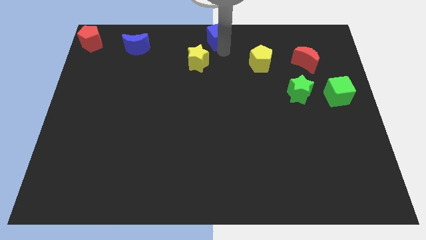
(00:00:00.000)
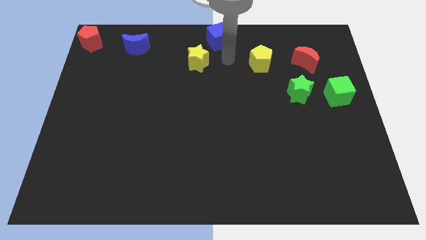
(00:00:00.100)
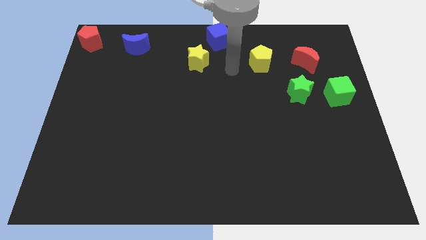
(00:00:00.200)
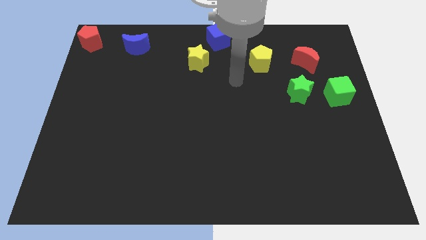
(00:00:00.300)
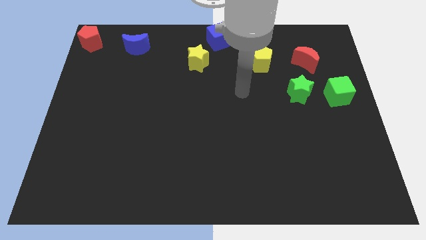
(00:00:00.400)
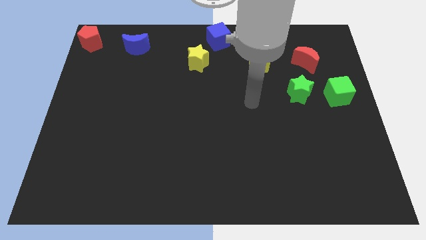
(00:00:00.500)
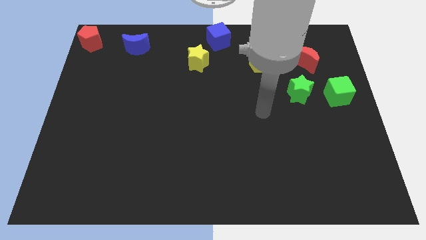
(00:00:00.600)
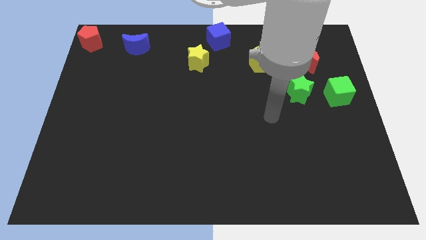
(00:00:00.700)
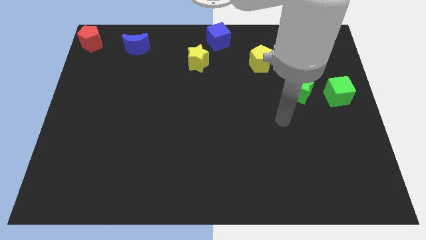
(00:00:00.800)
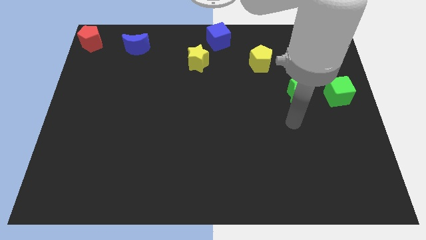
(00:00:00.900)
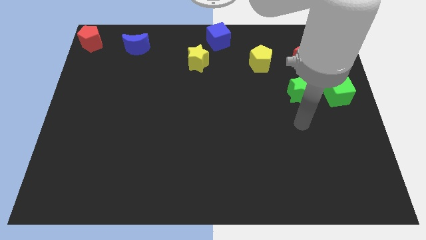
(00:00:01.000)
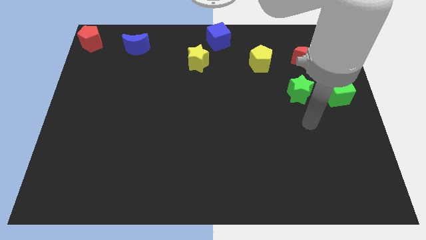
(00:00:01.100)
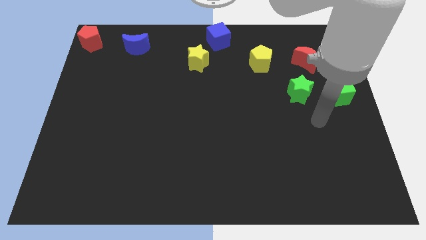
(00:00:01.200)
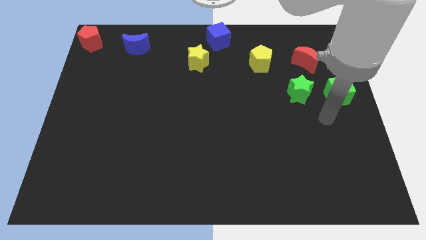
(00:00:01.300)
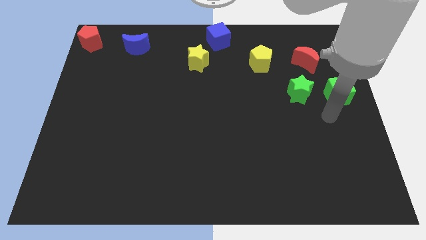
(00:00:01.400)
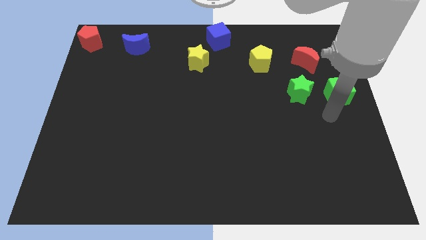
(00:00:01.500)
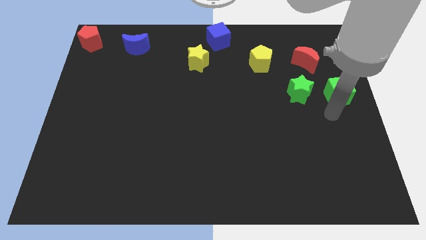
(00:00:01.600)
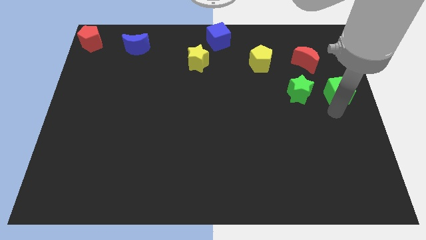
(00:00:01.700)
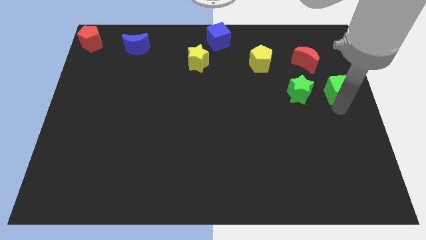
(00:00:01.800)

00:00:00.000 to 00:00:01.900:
move your arm to the bottom of the green cube

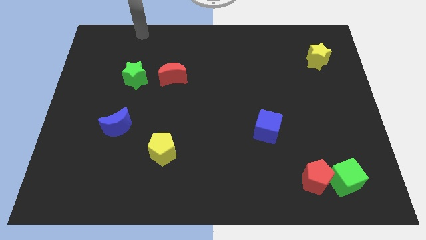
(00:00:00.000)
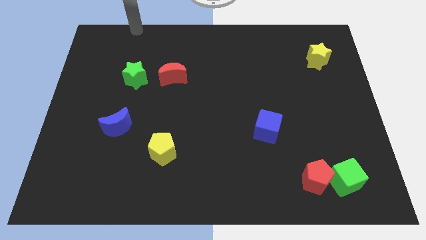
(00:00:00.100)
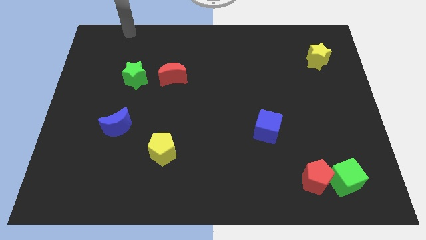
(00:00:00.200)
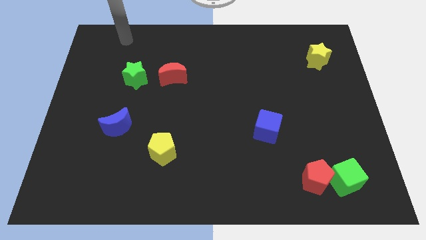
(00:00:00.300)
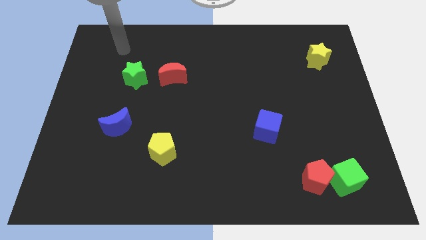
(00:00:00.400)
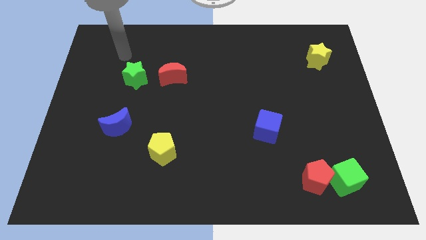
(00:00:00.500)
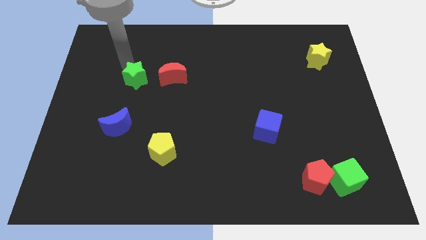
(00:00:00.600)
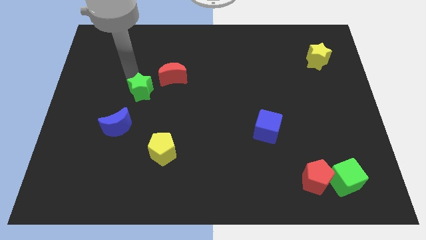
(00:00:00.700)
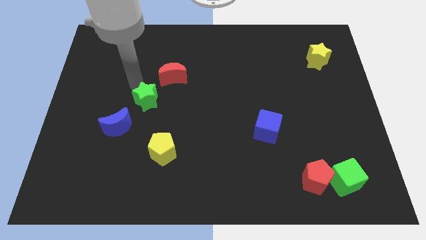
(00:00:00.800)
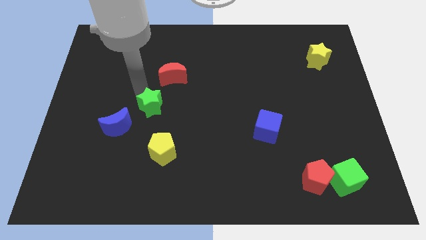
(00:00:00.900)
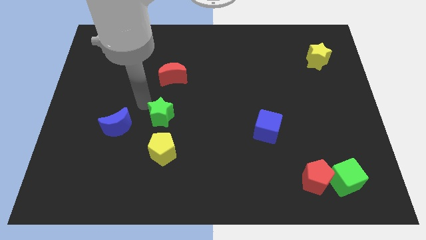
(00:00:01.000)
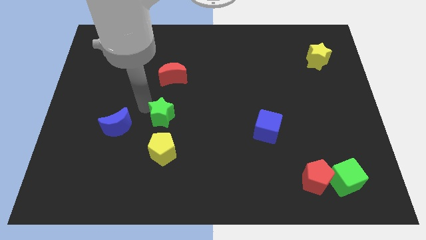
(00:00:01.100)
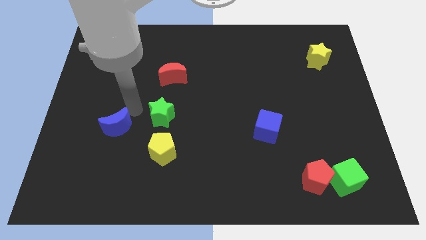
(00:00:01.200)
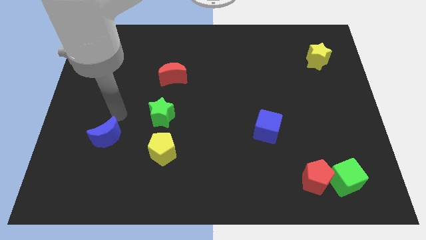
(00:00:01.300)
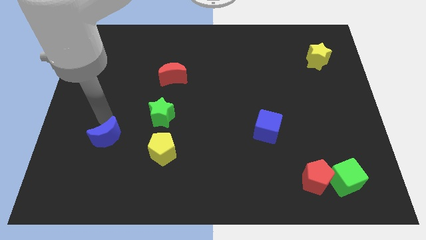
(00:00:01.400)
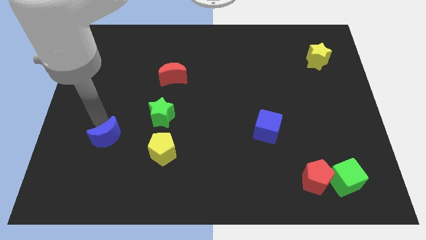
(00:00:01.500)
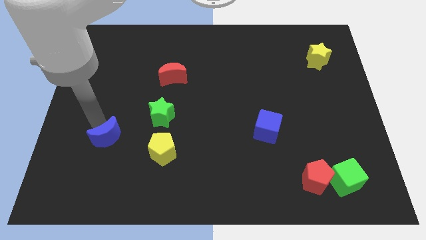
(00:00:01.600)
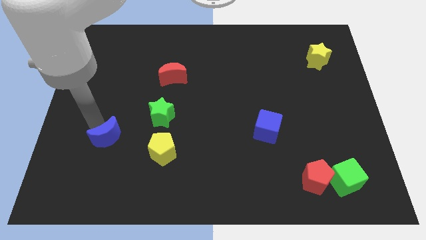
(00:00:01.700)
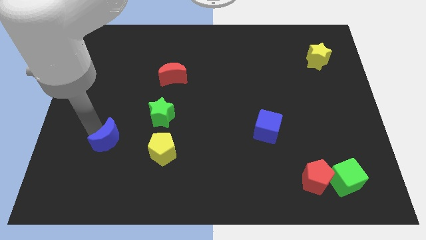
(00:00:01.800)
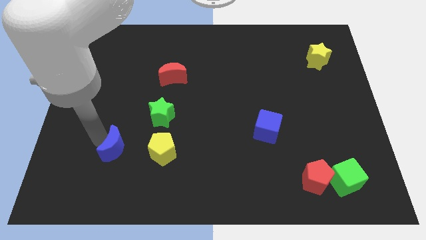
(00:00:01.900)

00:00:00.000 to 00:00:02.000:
push the green star close to the yellow pentagon

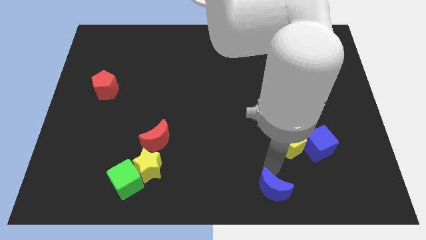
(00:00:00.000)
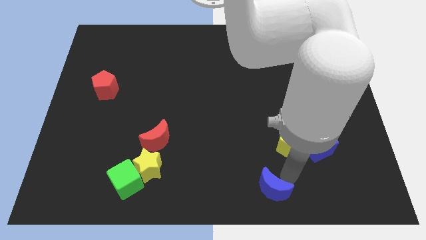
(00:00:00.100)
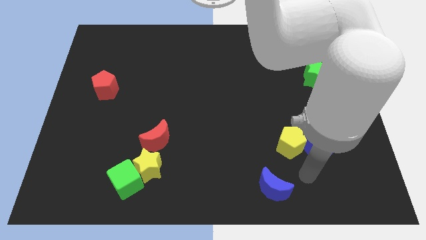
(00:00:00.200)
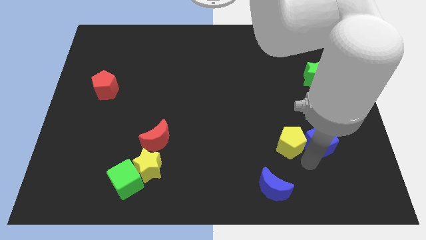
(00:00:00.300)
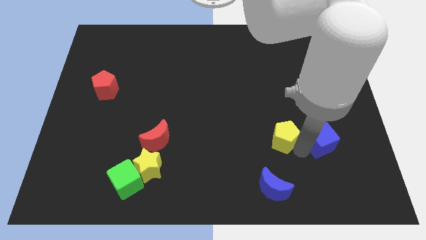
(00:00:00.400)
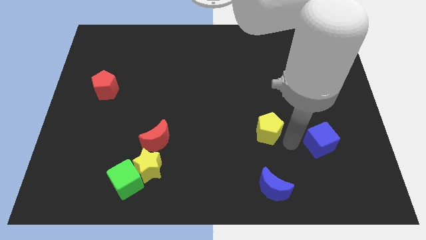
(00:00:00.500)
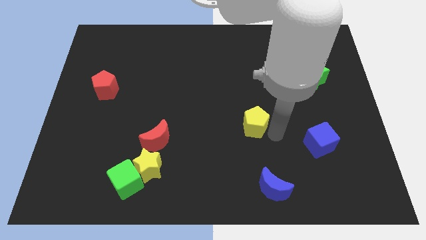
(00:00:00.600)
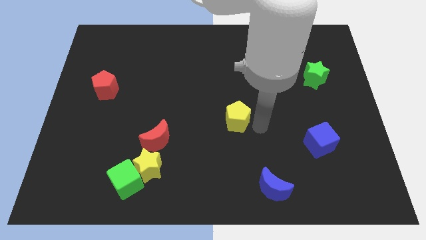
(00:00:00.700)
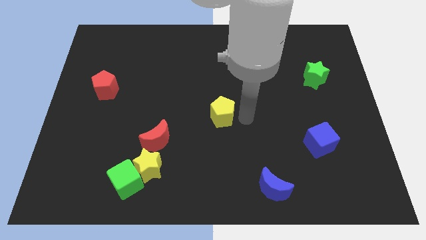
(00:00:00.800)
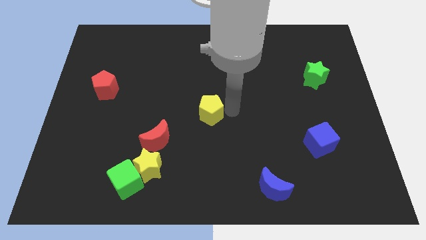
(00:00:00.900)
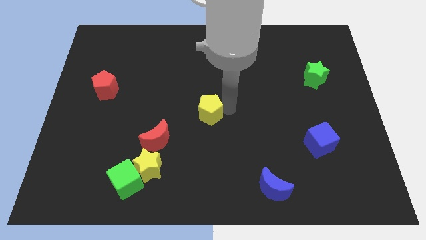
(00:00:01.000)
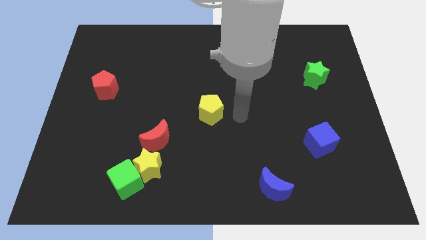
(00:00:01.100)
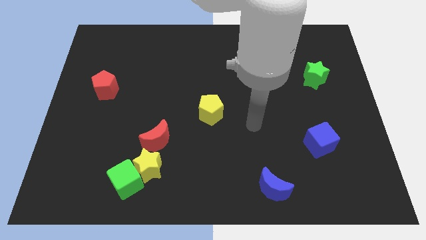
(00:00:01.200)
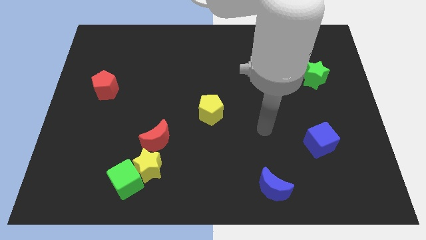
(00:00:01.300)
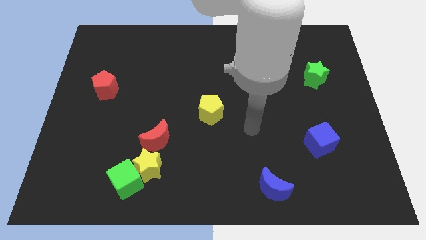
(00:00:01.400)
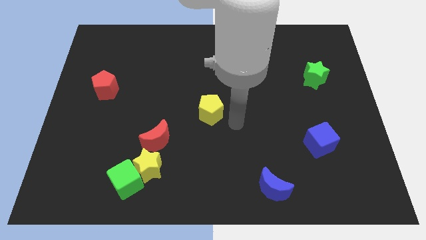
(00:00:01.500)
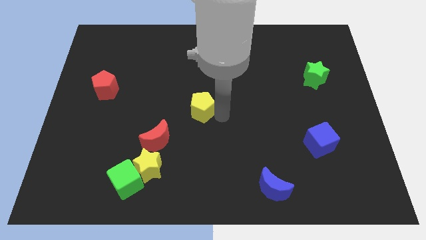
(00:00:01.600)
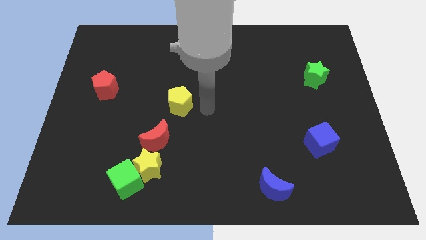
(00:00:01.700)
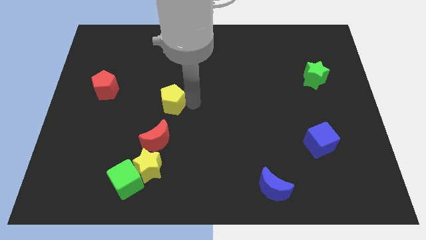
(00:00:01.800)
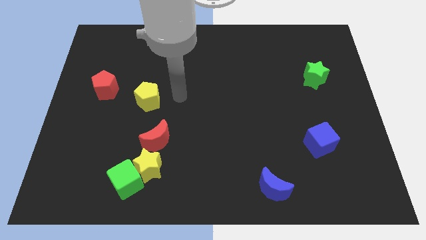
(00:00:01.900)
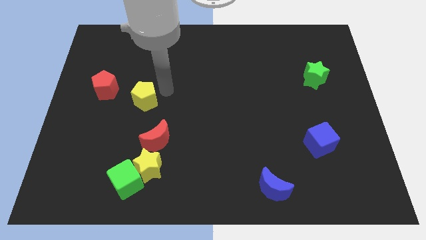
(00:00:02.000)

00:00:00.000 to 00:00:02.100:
move the yellow pentagon towards the right to the red pentagon

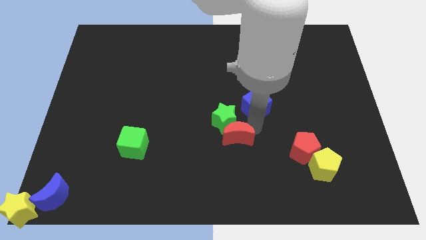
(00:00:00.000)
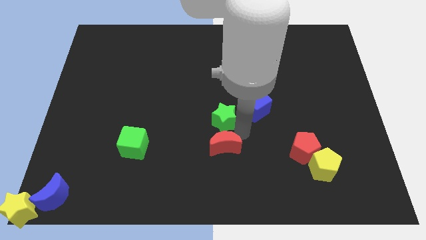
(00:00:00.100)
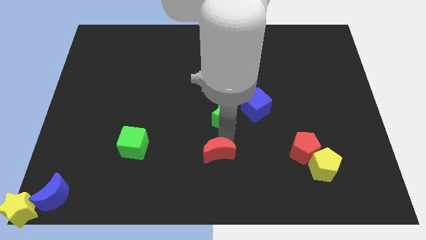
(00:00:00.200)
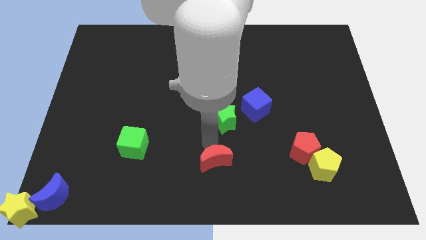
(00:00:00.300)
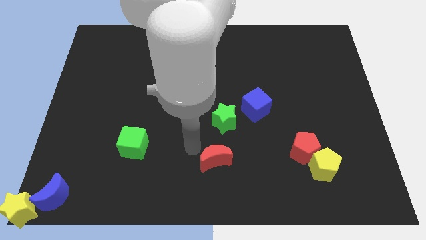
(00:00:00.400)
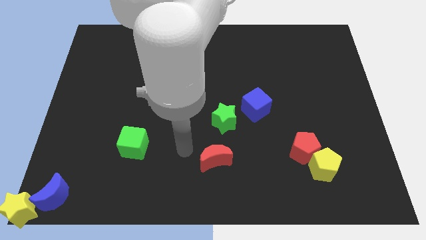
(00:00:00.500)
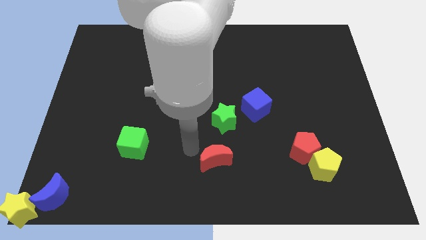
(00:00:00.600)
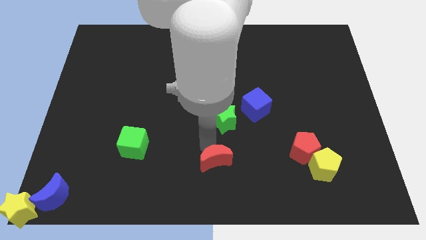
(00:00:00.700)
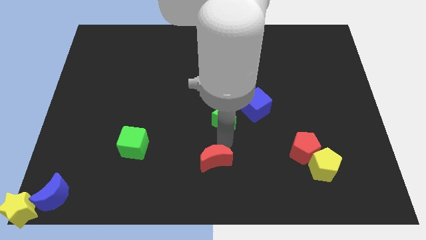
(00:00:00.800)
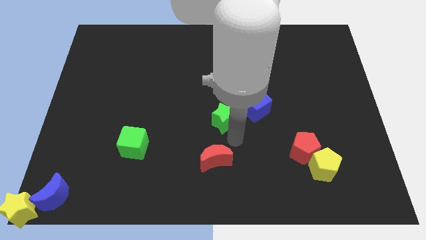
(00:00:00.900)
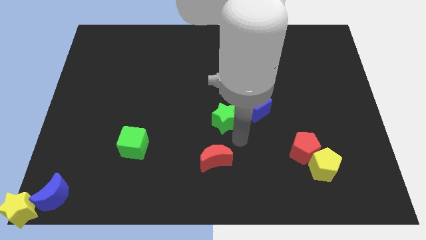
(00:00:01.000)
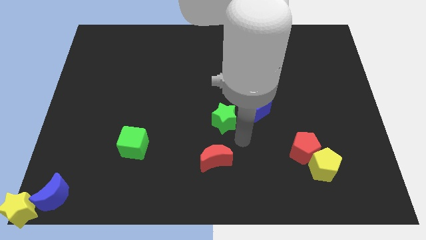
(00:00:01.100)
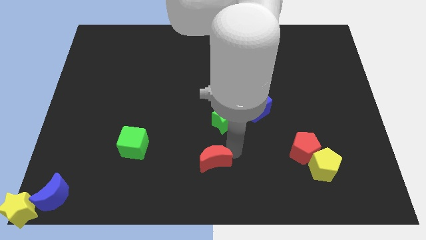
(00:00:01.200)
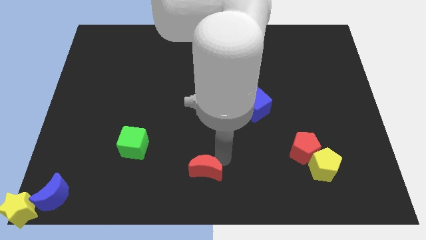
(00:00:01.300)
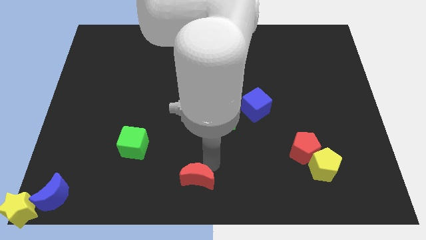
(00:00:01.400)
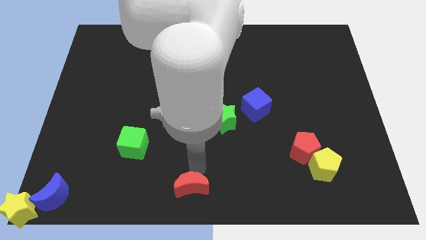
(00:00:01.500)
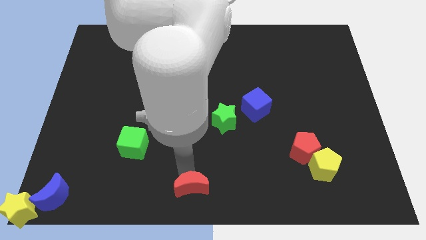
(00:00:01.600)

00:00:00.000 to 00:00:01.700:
slide the red moon diagonally botttom left to the green star

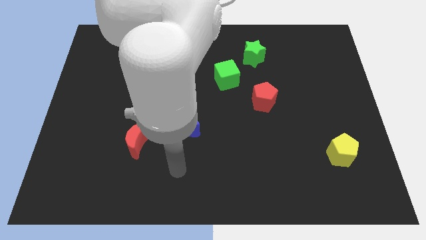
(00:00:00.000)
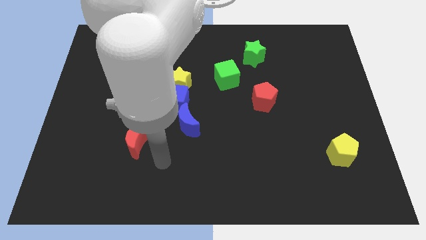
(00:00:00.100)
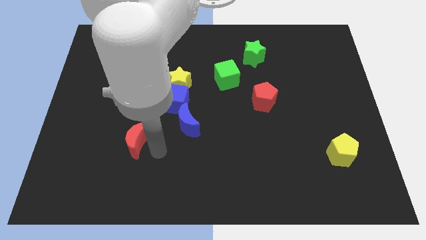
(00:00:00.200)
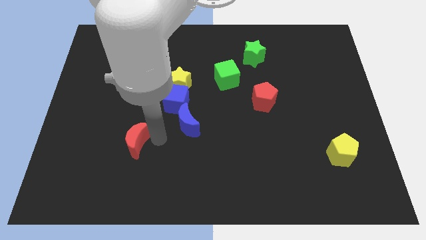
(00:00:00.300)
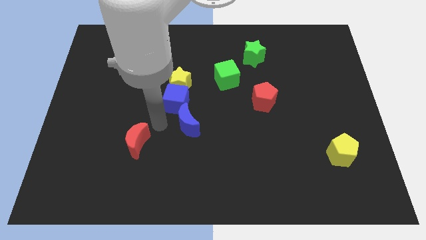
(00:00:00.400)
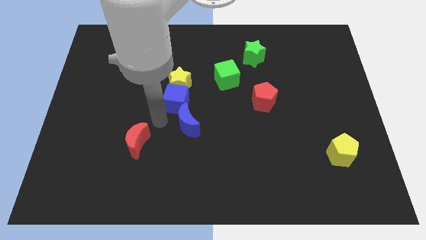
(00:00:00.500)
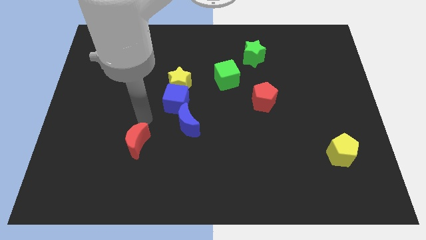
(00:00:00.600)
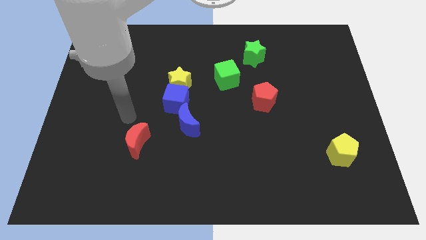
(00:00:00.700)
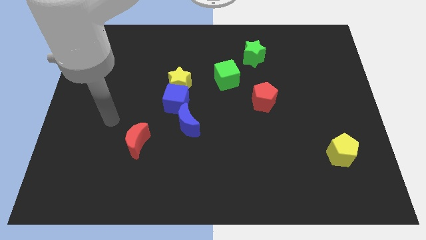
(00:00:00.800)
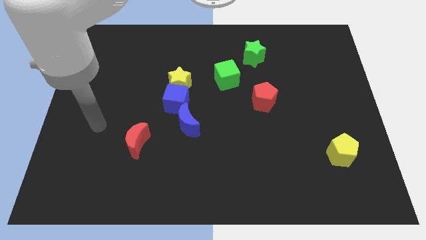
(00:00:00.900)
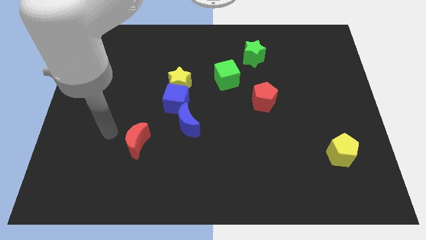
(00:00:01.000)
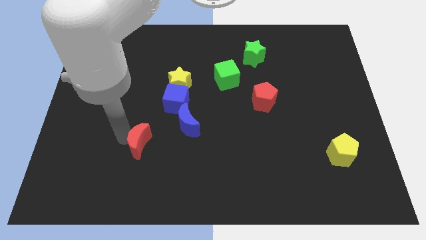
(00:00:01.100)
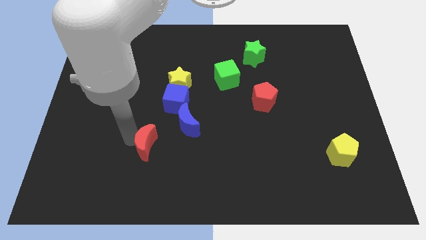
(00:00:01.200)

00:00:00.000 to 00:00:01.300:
move the arm into the red crescent
